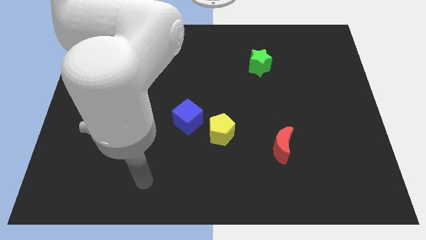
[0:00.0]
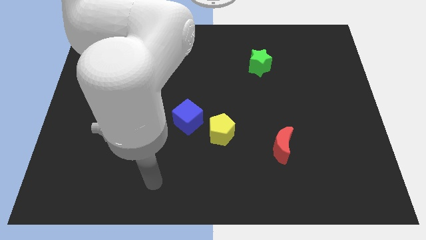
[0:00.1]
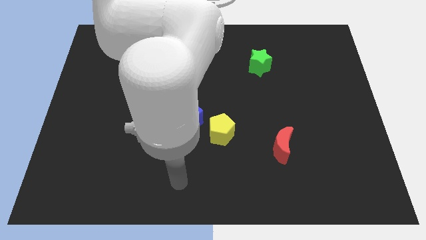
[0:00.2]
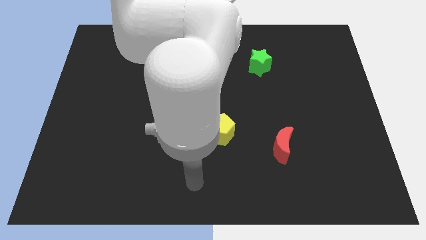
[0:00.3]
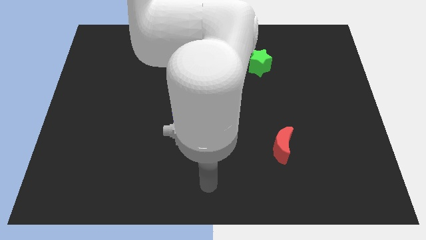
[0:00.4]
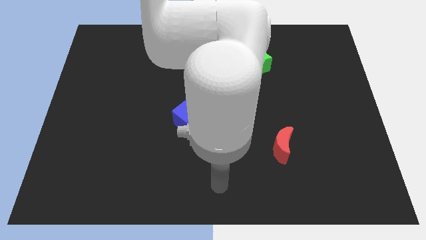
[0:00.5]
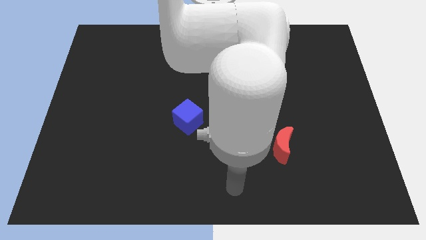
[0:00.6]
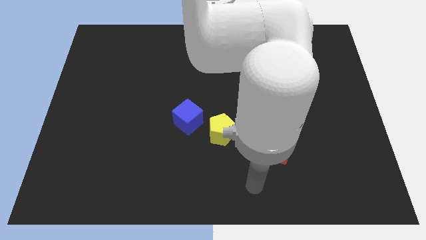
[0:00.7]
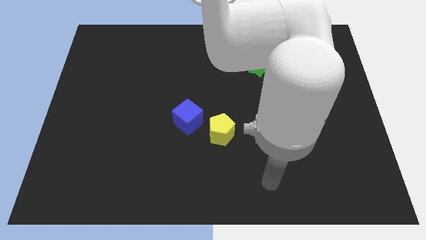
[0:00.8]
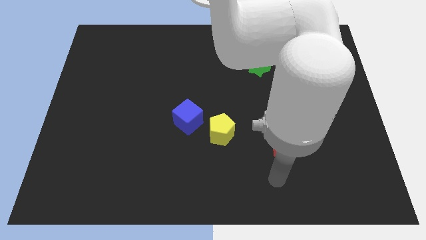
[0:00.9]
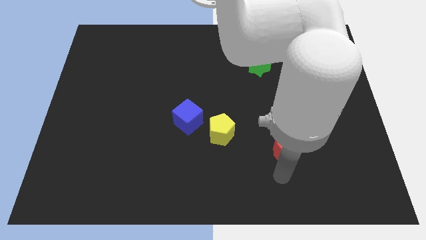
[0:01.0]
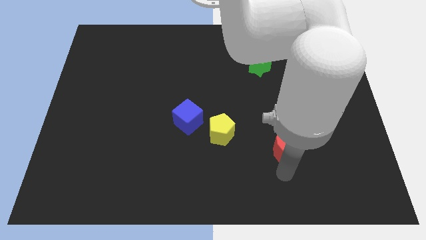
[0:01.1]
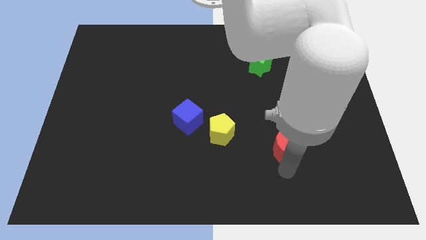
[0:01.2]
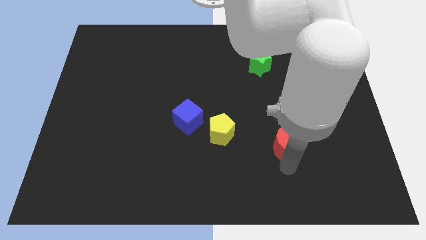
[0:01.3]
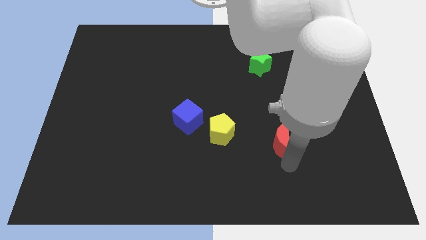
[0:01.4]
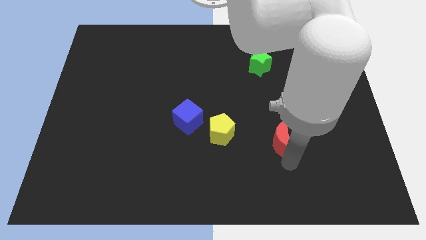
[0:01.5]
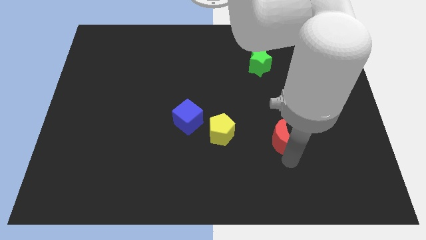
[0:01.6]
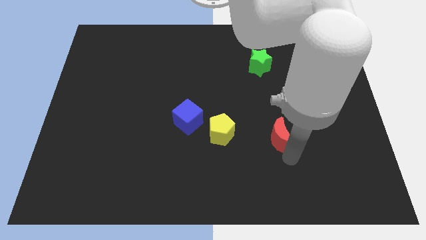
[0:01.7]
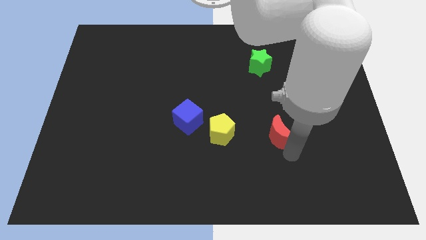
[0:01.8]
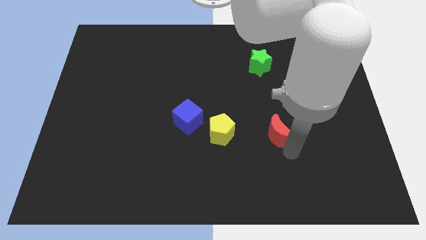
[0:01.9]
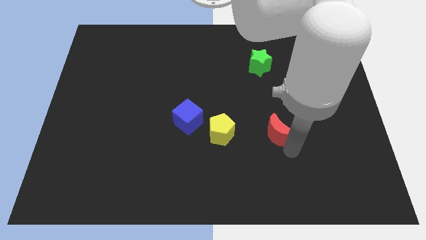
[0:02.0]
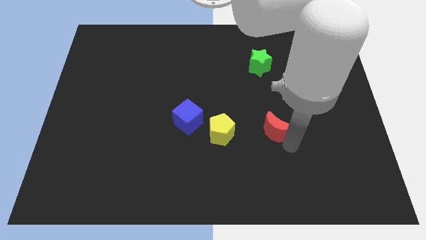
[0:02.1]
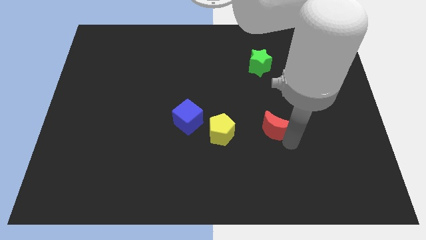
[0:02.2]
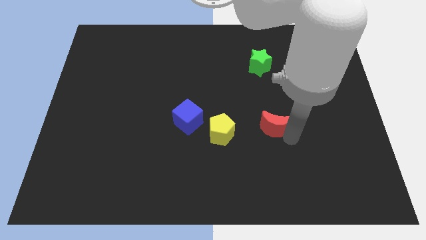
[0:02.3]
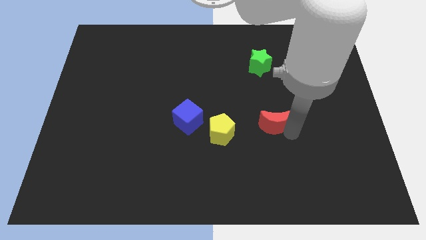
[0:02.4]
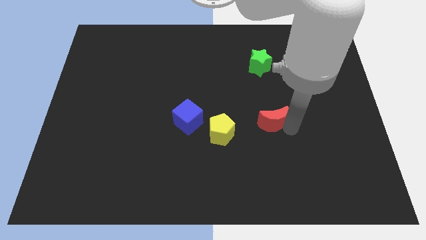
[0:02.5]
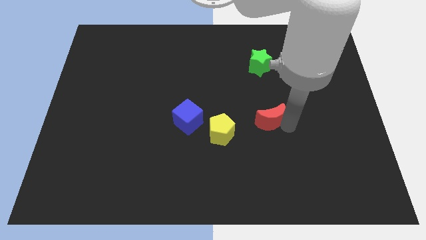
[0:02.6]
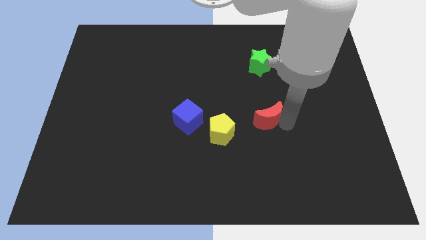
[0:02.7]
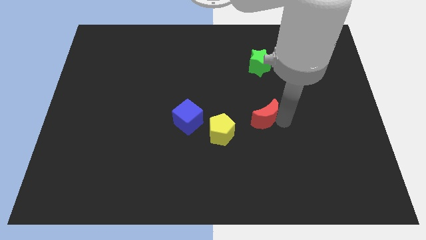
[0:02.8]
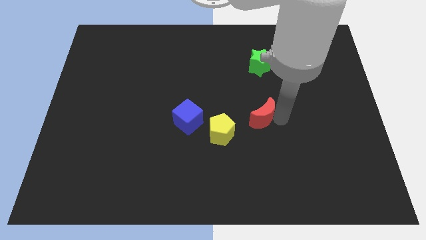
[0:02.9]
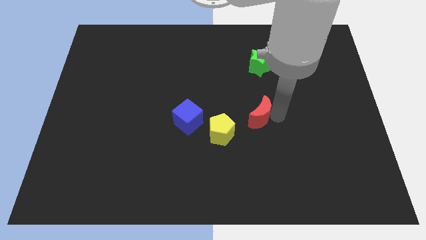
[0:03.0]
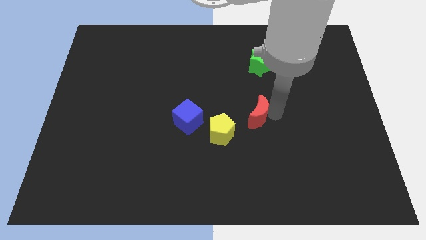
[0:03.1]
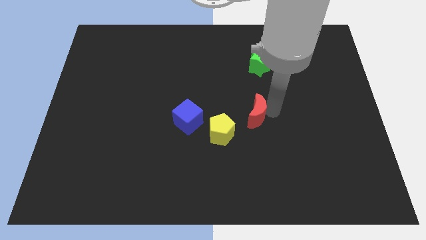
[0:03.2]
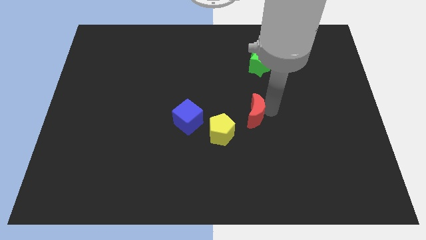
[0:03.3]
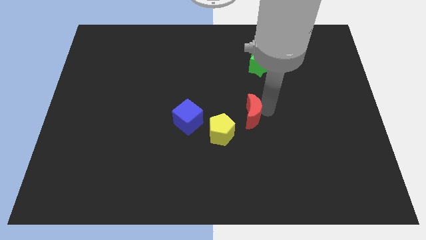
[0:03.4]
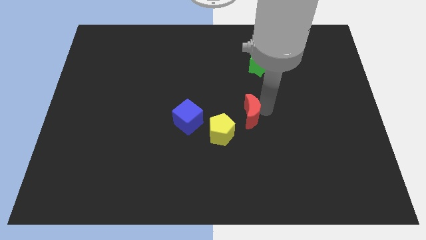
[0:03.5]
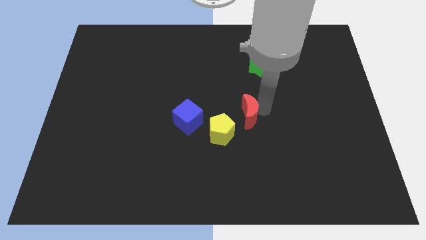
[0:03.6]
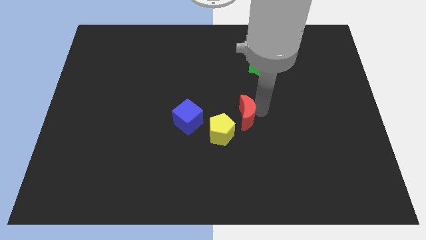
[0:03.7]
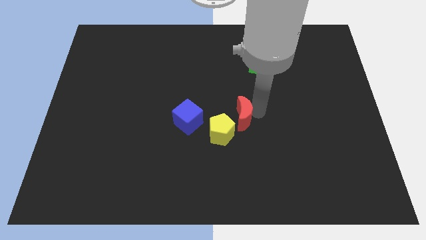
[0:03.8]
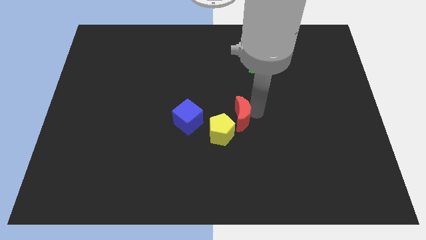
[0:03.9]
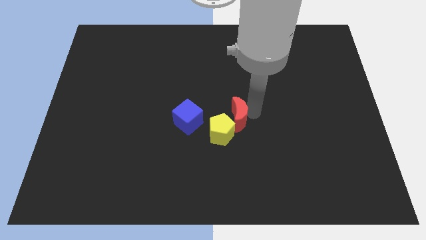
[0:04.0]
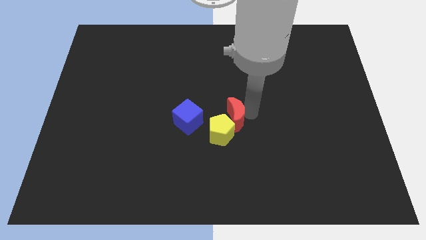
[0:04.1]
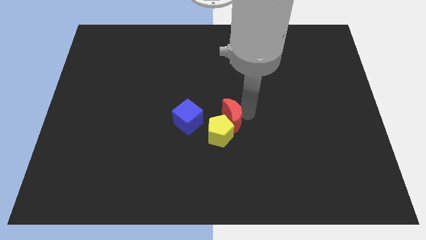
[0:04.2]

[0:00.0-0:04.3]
slide the red moon next to the yellow pentagon

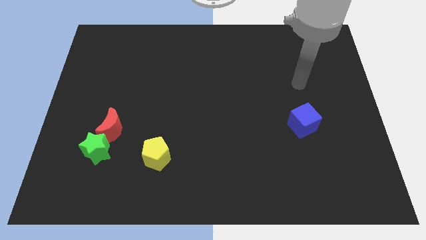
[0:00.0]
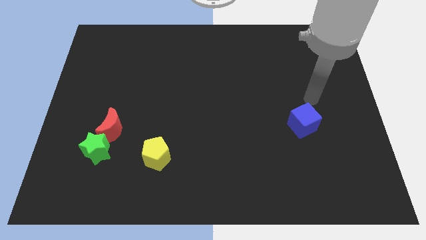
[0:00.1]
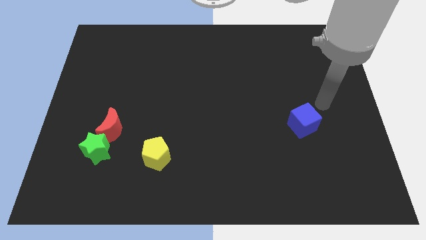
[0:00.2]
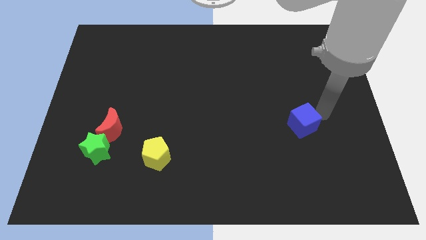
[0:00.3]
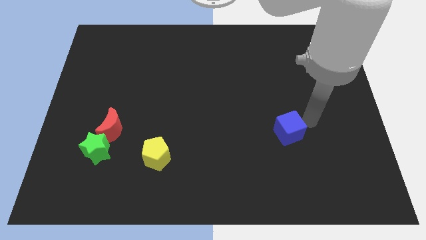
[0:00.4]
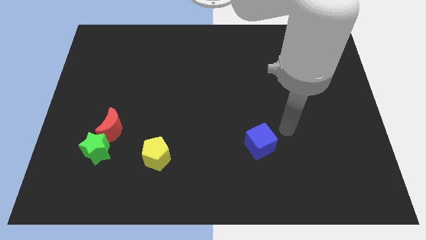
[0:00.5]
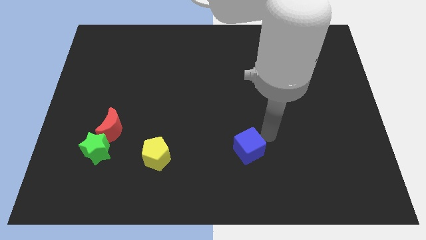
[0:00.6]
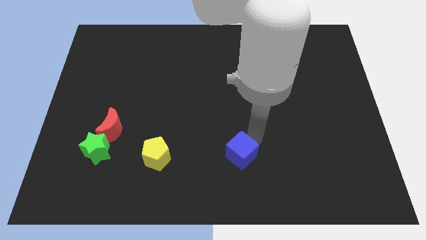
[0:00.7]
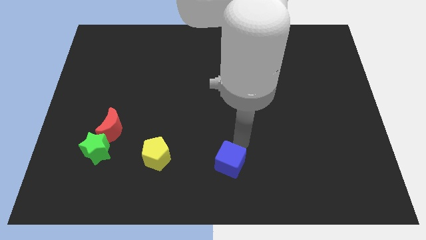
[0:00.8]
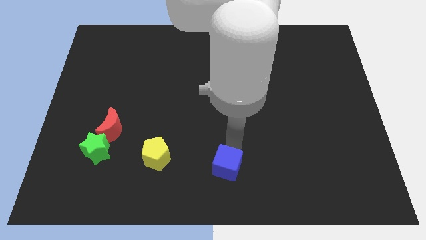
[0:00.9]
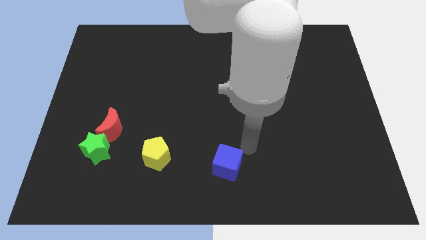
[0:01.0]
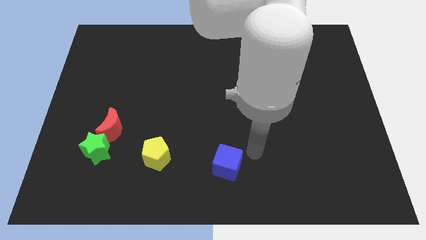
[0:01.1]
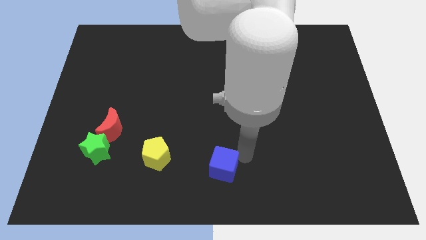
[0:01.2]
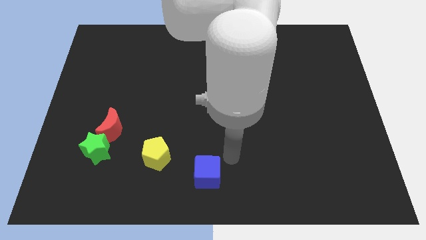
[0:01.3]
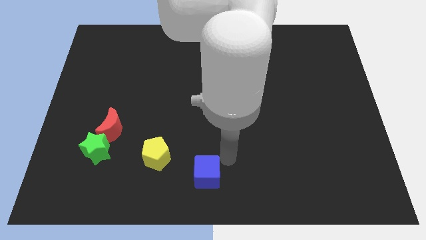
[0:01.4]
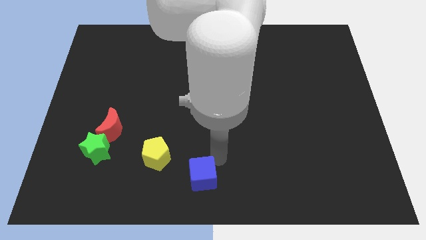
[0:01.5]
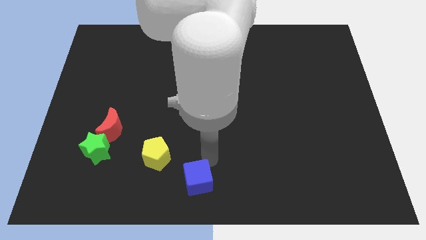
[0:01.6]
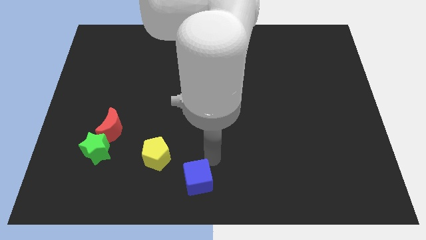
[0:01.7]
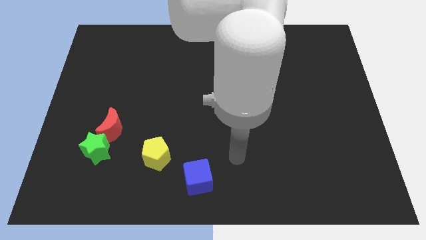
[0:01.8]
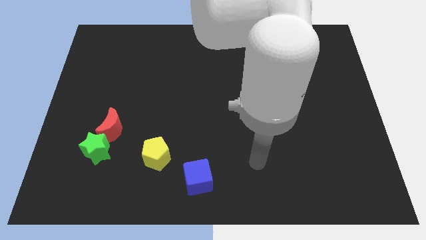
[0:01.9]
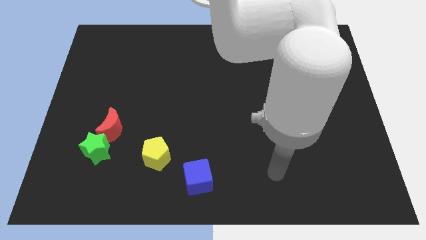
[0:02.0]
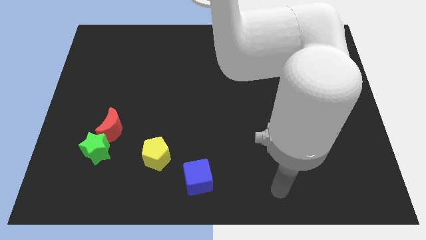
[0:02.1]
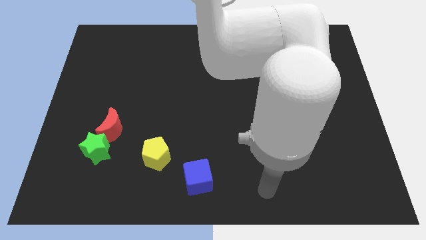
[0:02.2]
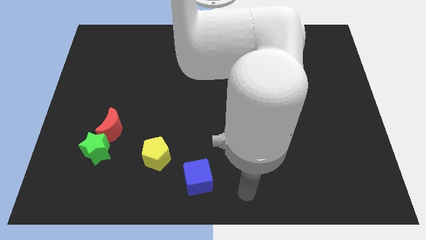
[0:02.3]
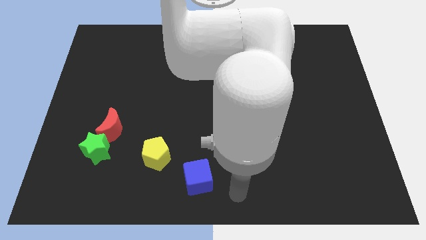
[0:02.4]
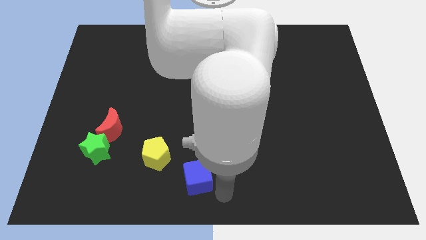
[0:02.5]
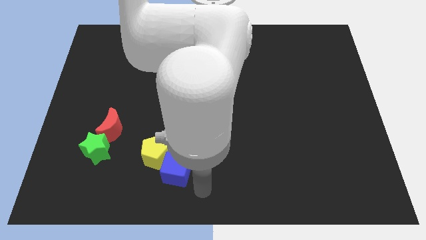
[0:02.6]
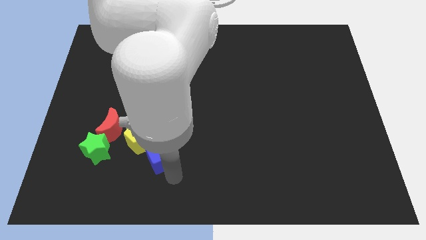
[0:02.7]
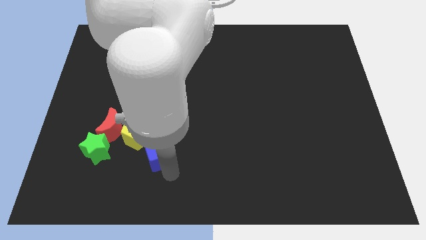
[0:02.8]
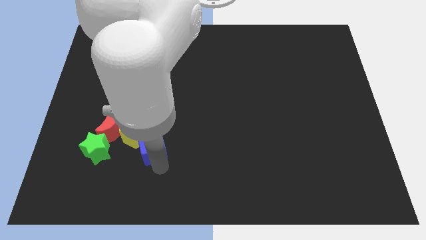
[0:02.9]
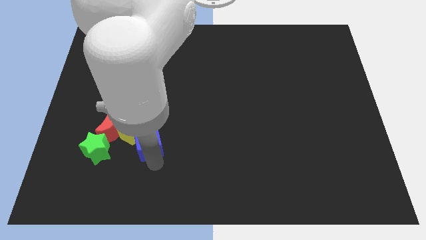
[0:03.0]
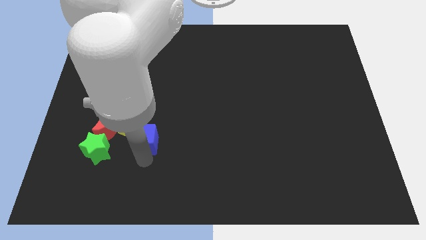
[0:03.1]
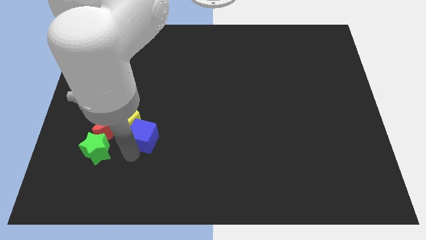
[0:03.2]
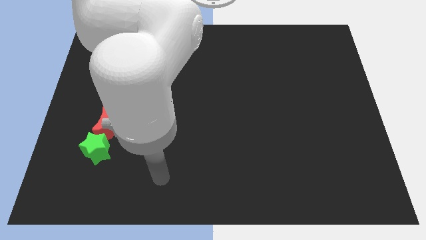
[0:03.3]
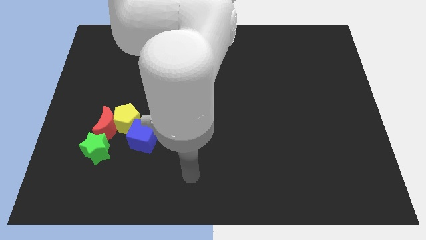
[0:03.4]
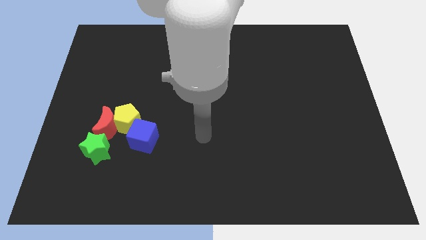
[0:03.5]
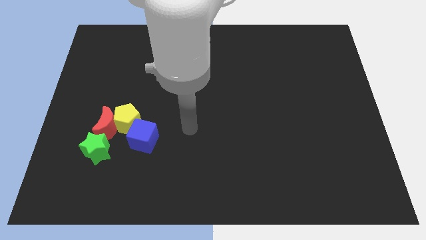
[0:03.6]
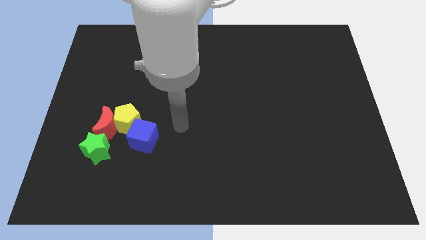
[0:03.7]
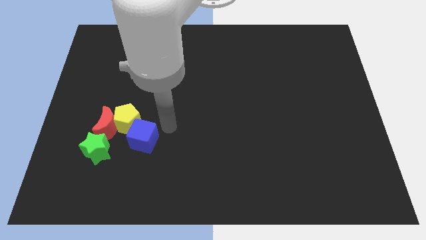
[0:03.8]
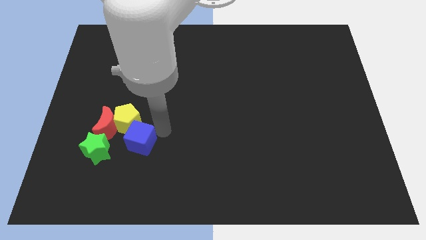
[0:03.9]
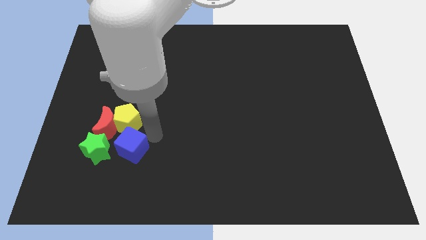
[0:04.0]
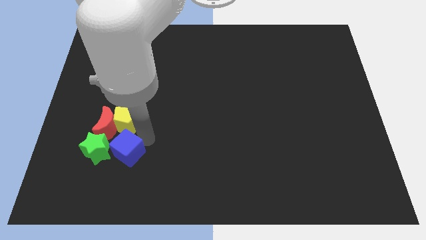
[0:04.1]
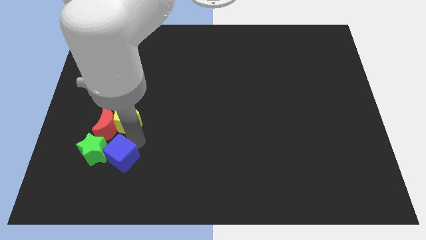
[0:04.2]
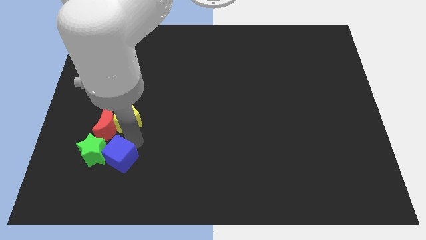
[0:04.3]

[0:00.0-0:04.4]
push the blue block close to the star
